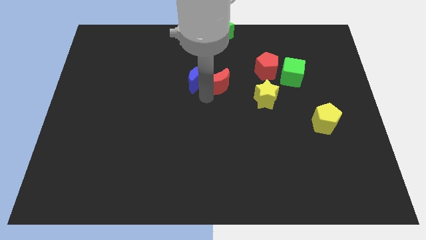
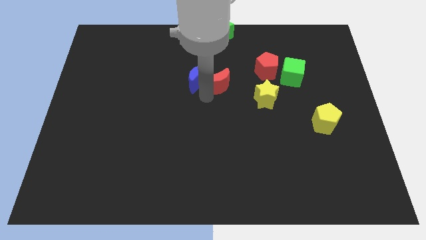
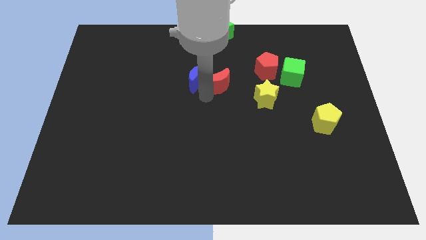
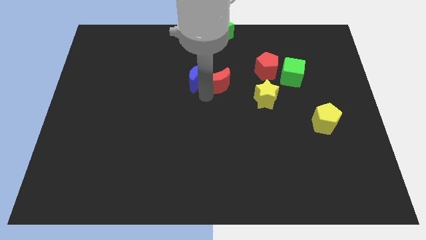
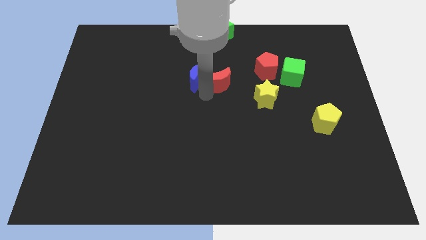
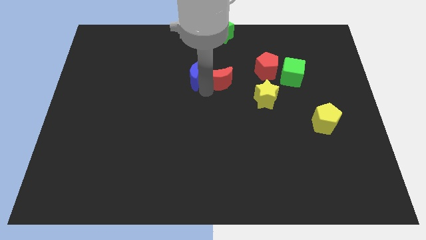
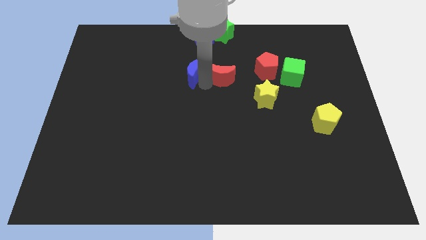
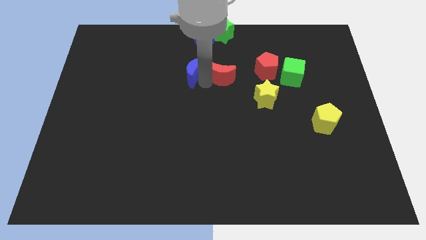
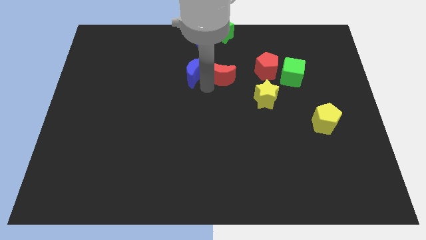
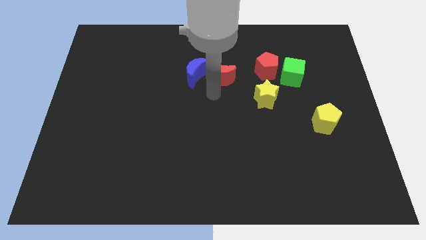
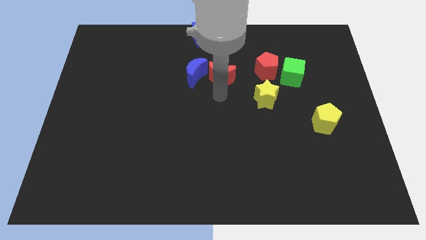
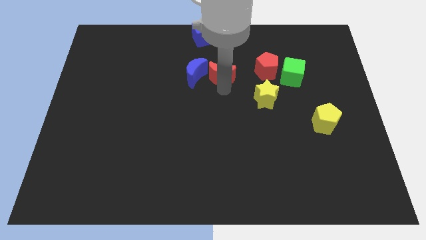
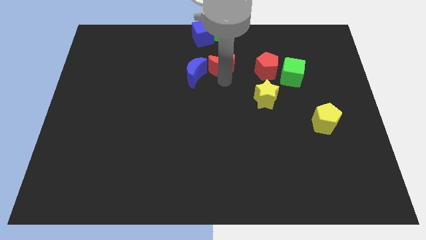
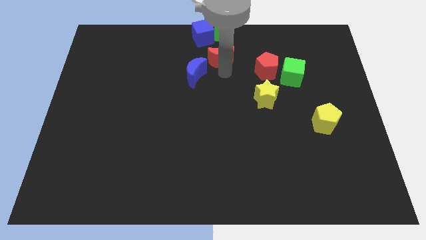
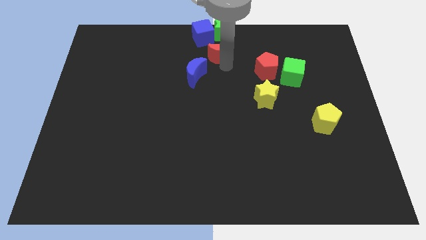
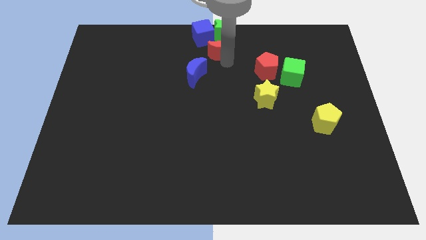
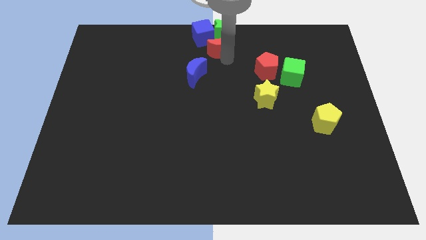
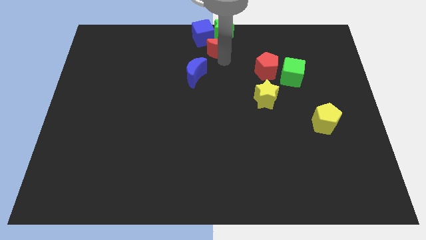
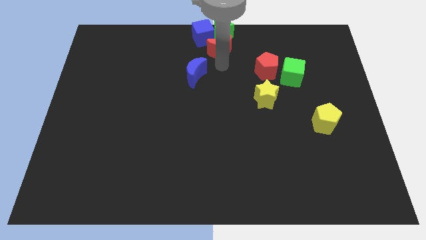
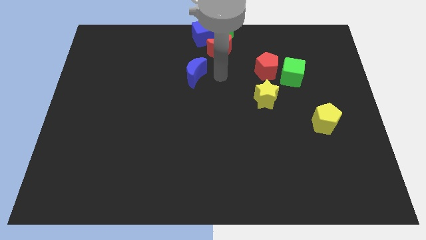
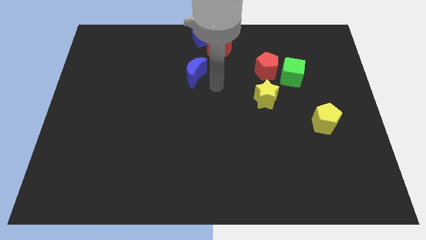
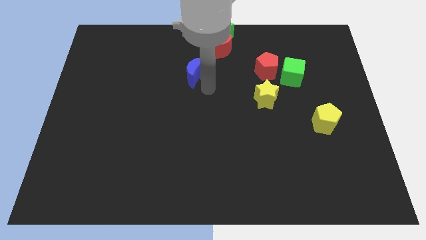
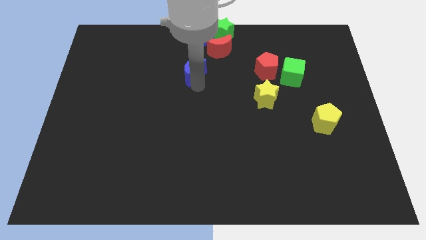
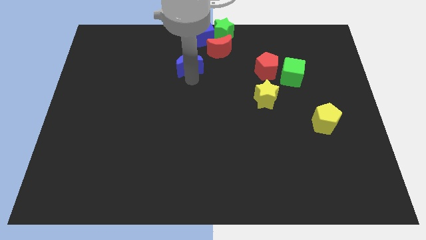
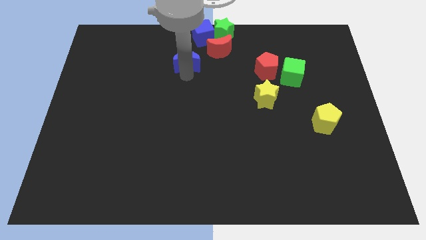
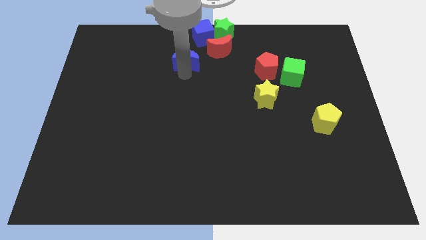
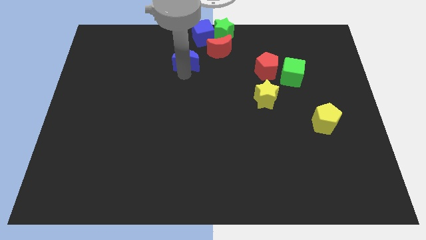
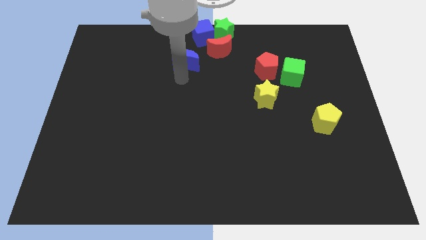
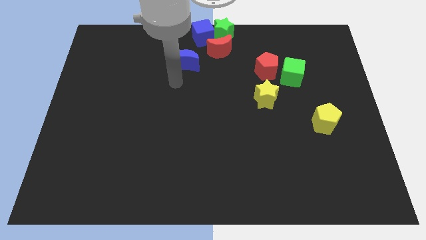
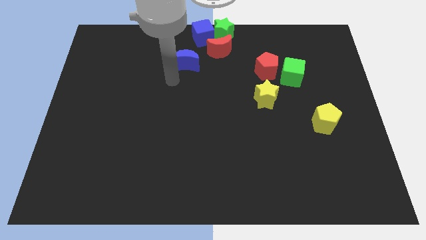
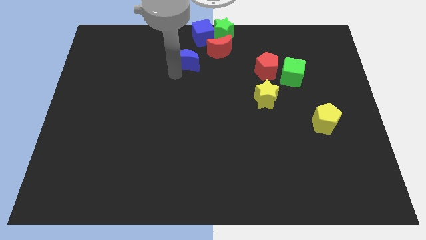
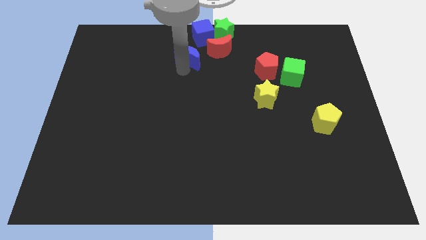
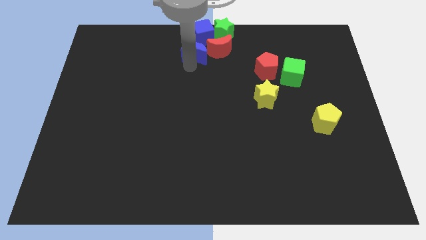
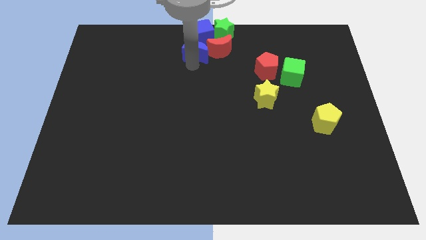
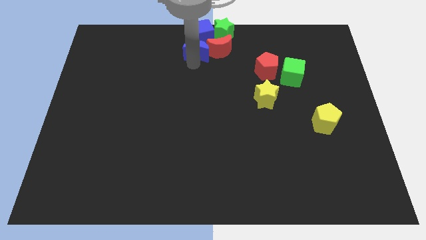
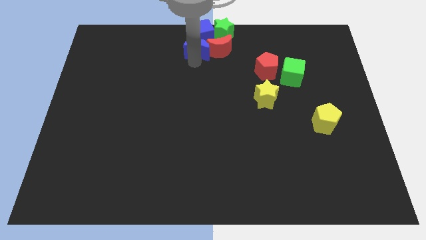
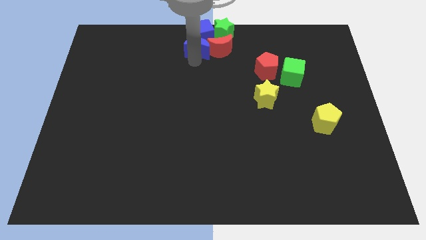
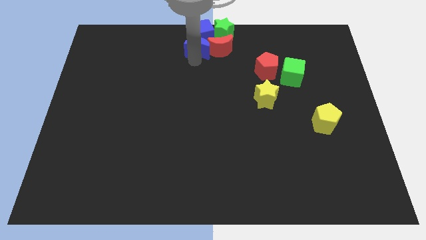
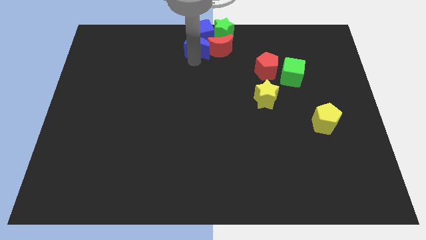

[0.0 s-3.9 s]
push the red crescent away from the blue crescent

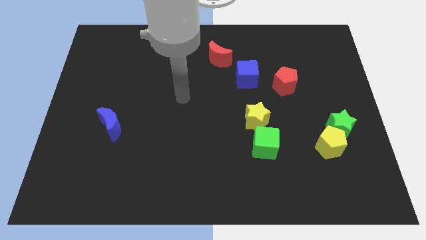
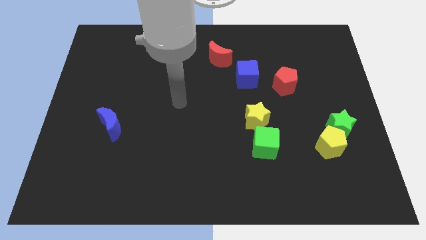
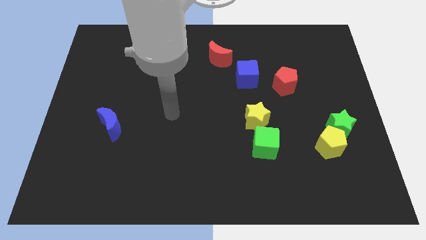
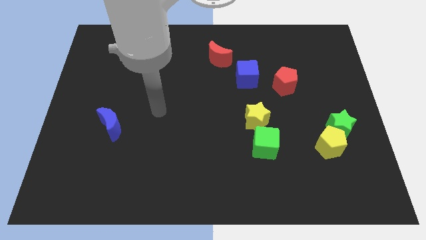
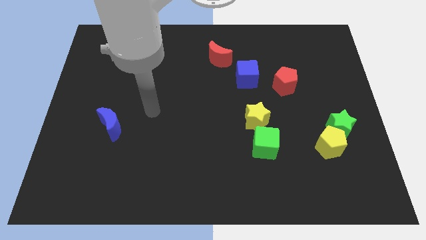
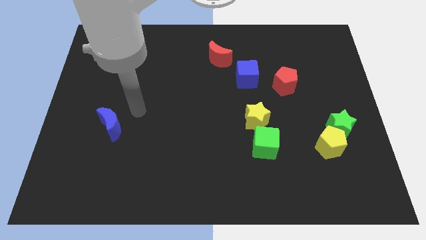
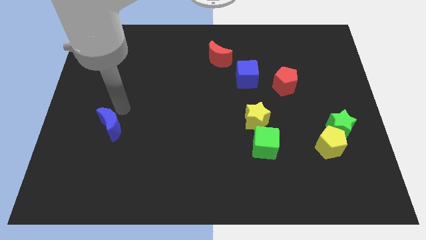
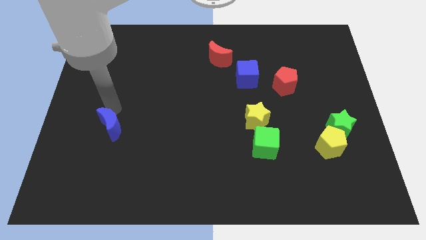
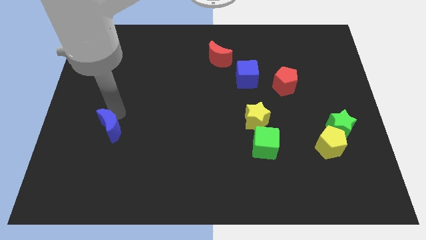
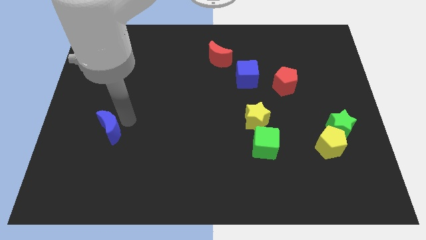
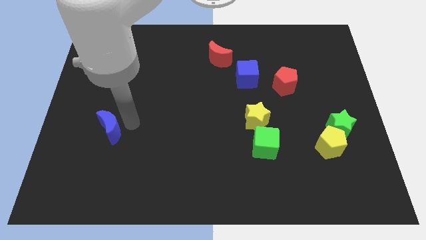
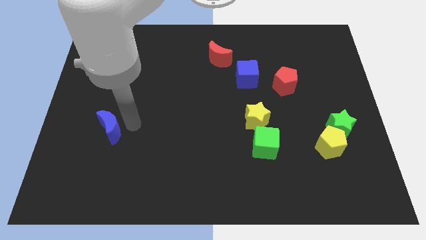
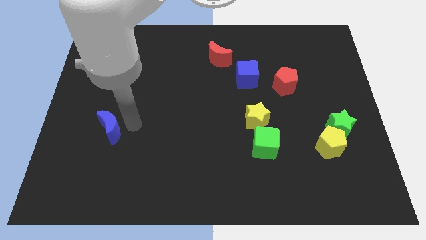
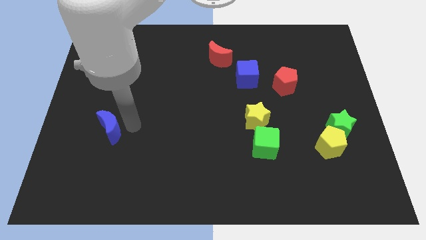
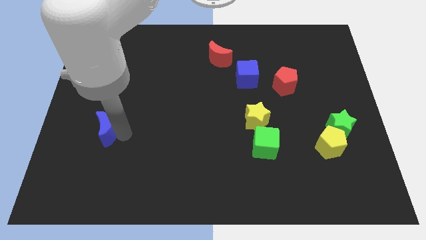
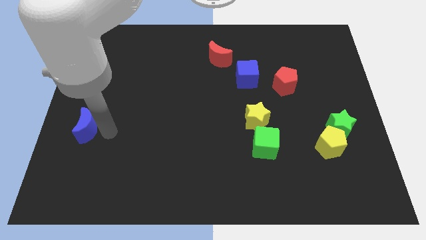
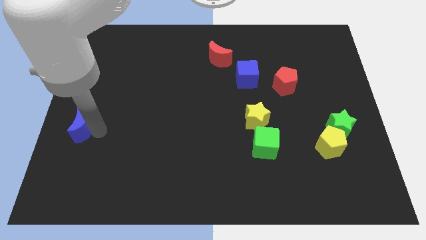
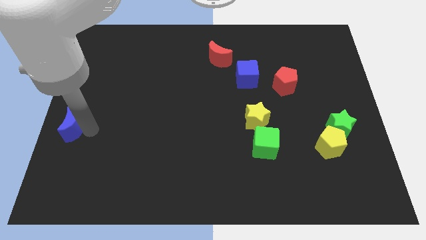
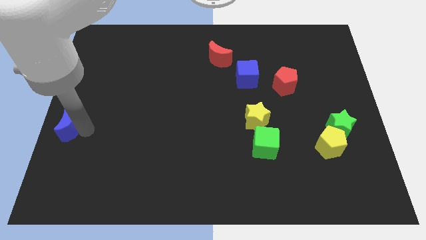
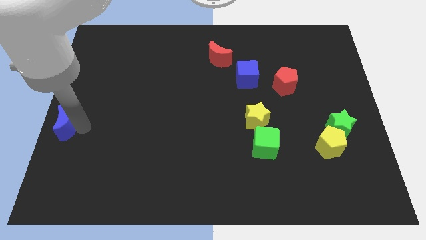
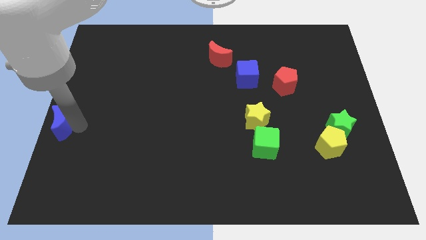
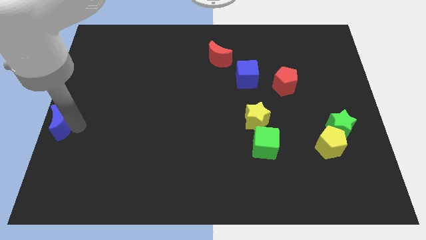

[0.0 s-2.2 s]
push blue moon to the center left

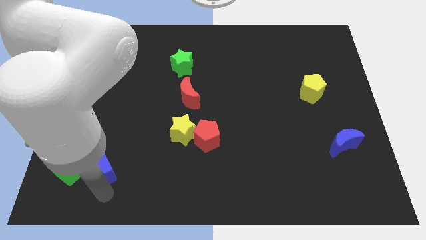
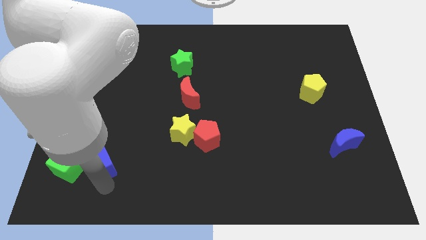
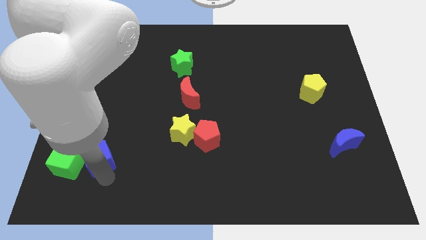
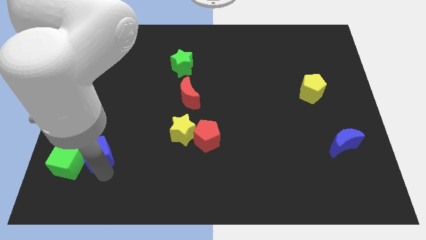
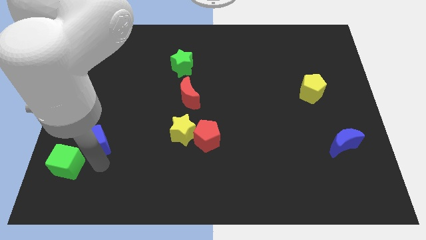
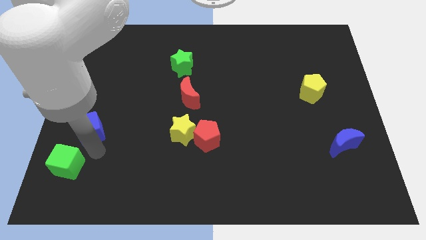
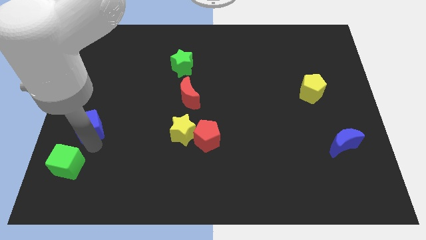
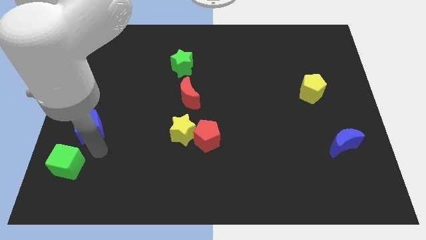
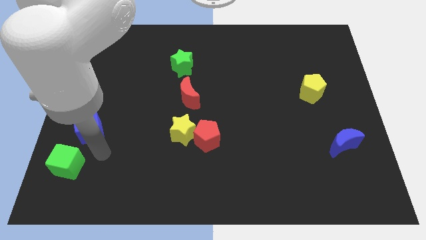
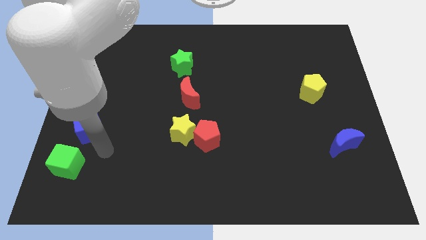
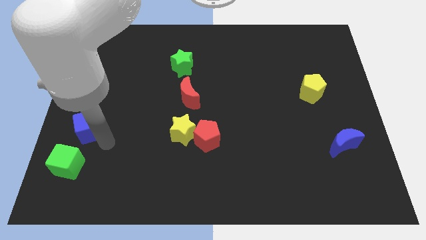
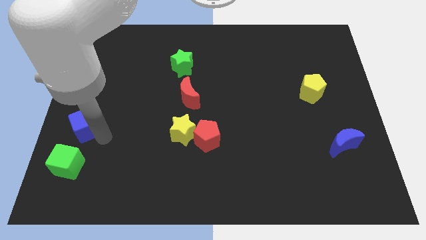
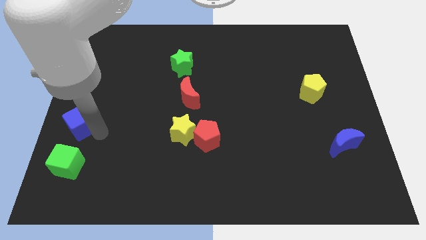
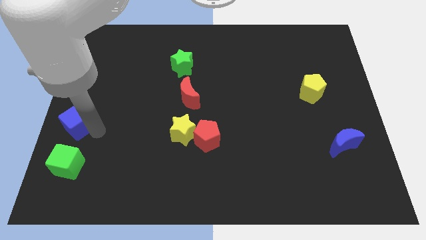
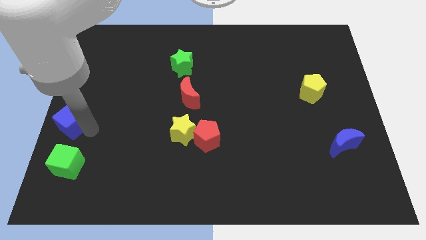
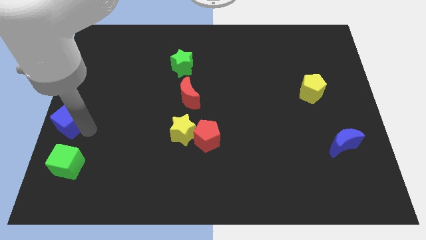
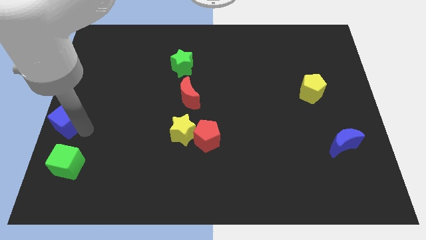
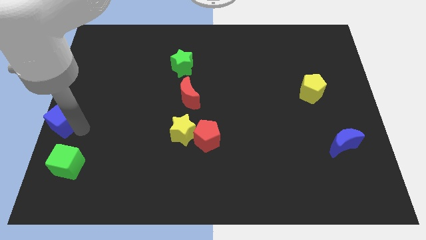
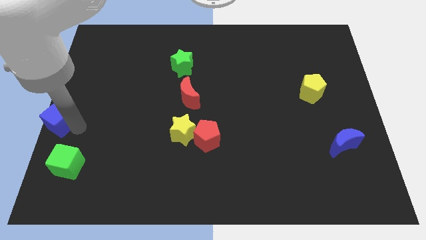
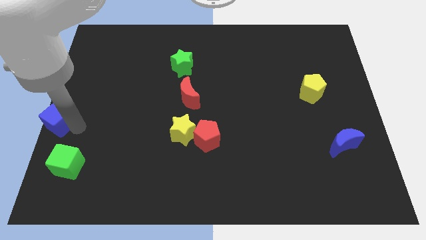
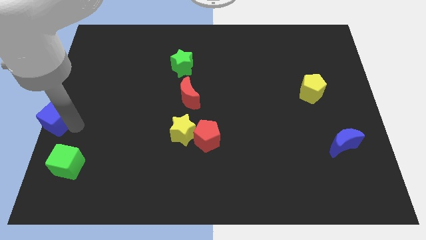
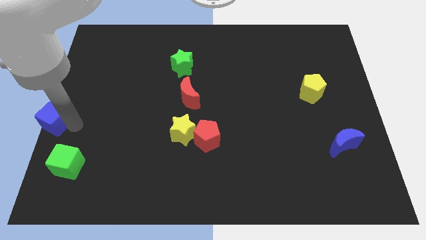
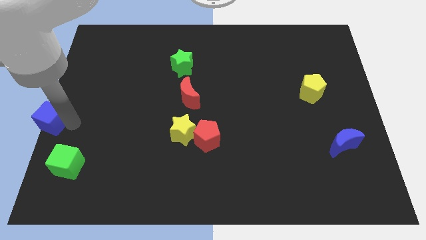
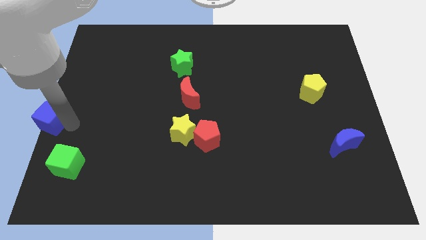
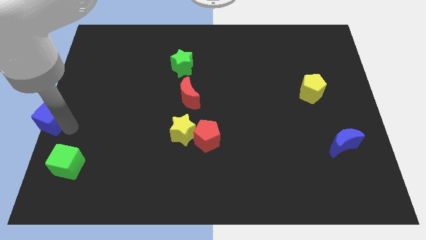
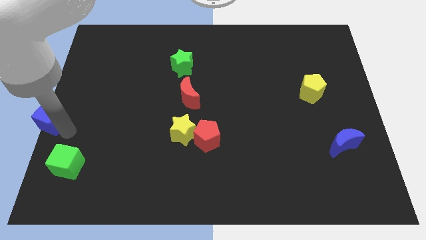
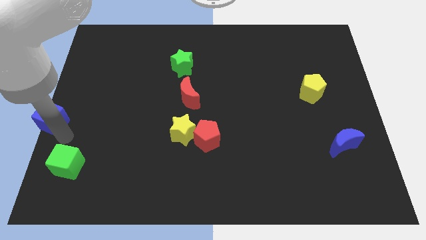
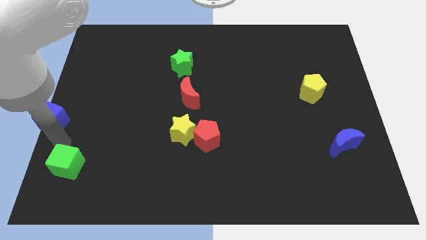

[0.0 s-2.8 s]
push the blue cube to the center left of the board

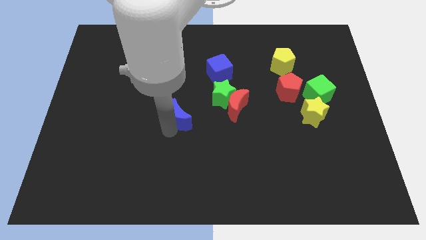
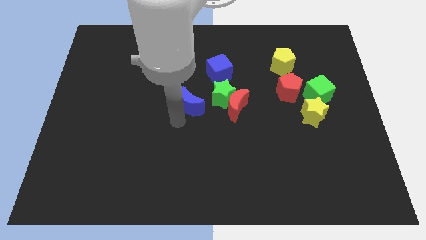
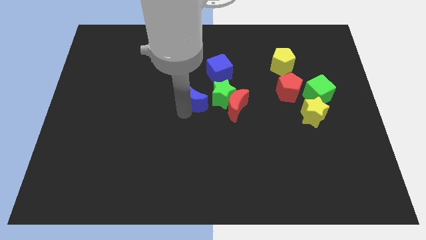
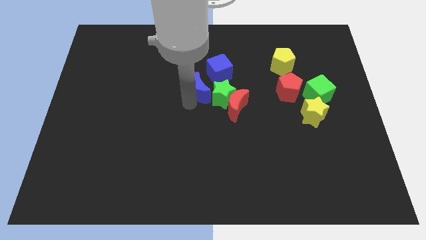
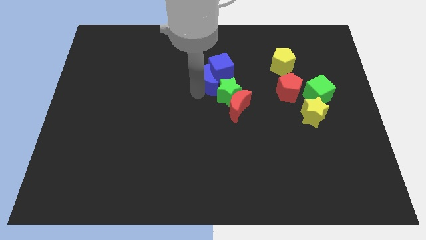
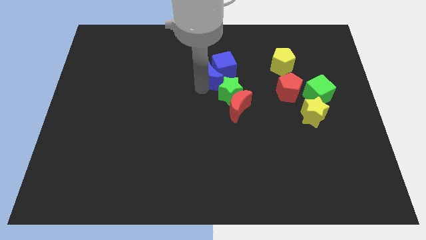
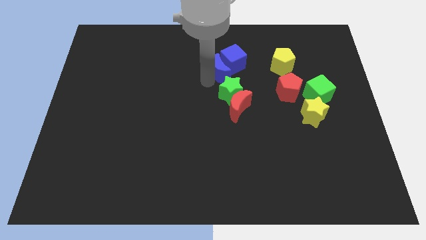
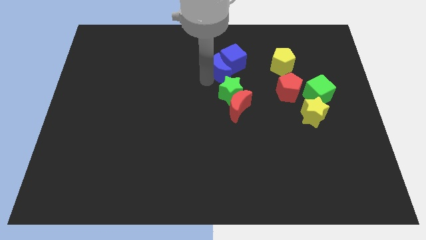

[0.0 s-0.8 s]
move the blue crescent to the left of the blue cube
